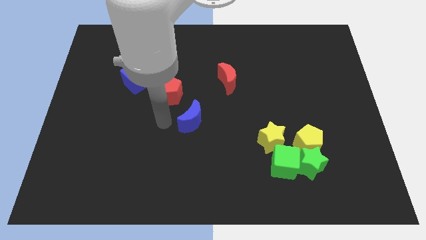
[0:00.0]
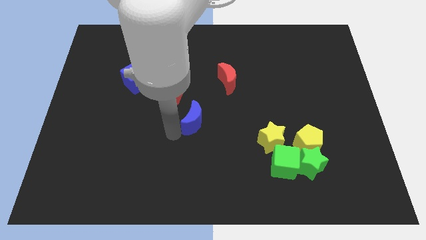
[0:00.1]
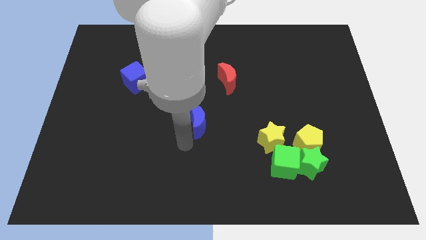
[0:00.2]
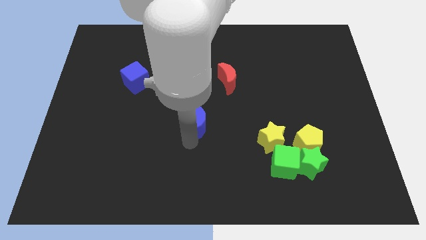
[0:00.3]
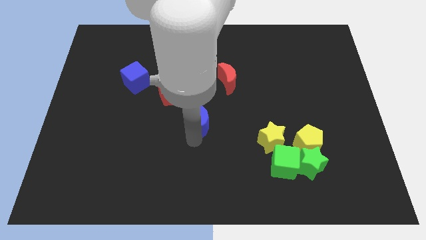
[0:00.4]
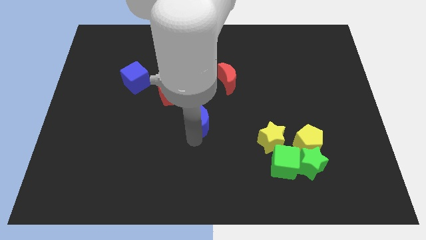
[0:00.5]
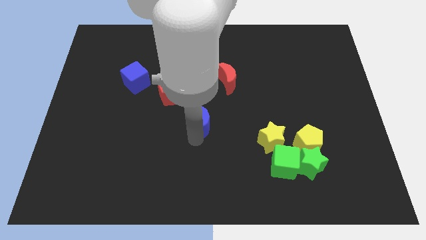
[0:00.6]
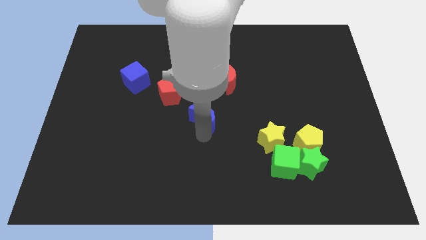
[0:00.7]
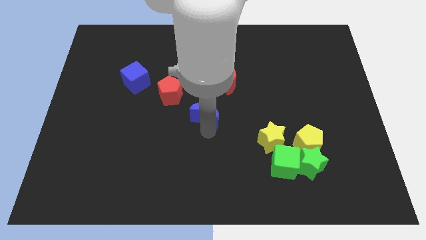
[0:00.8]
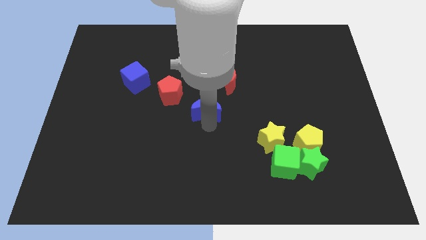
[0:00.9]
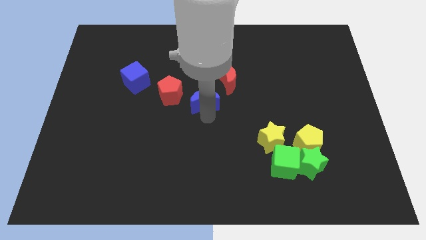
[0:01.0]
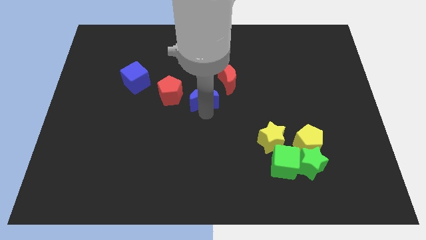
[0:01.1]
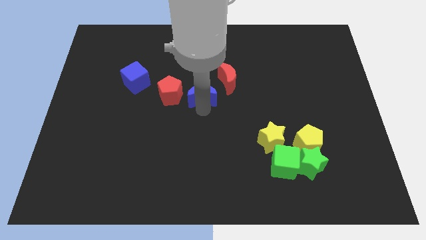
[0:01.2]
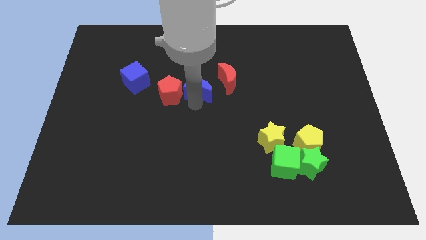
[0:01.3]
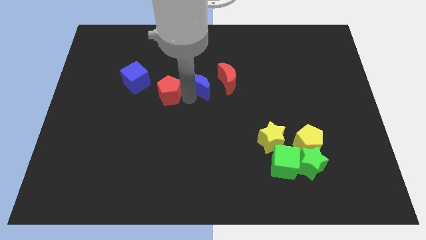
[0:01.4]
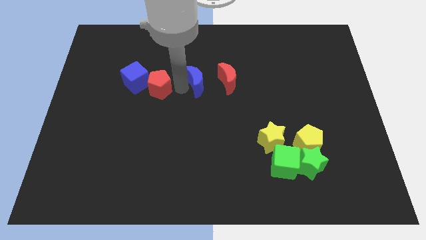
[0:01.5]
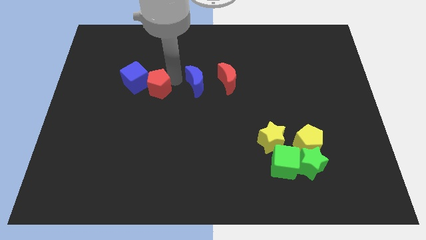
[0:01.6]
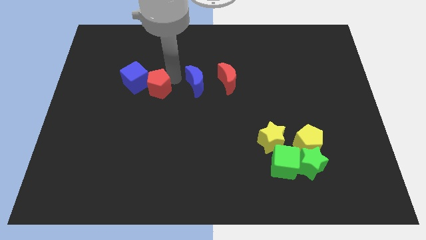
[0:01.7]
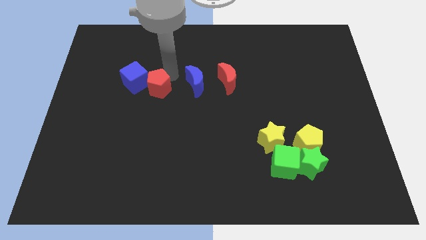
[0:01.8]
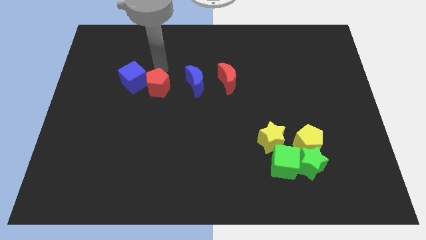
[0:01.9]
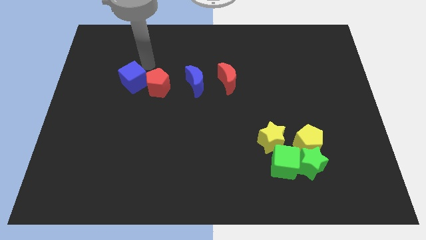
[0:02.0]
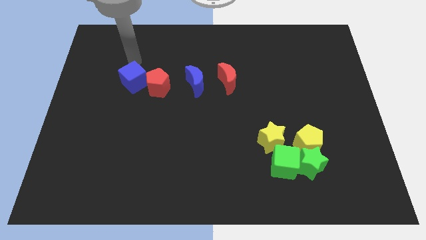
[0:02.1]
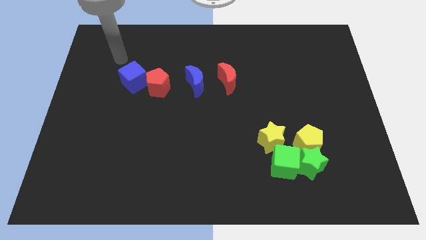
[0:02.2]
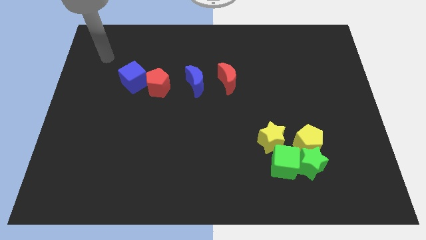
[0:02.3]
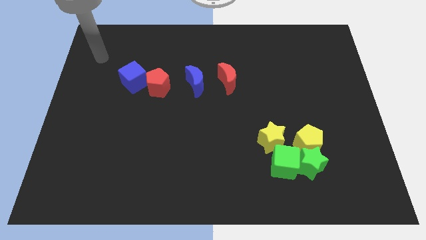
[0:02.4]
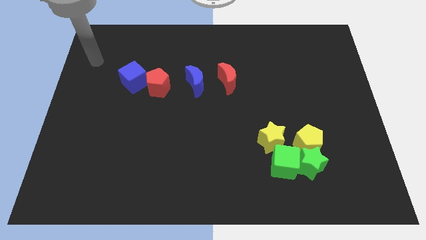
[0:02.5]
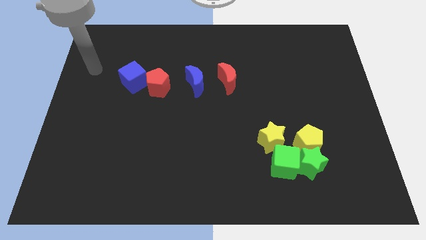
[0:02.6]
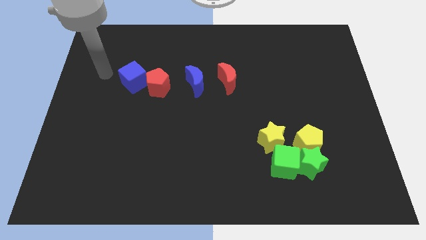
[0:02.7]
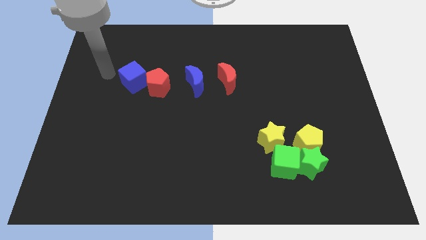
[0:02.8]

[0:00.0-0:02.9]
move the blue crescent to the right of the red pentagon

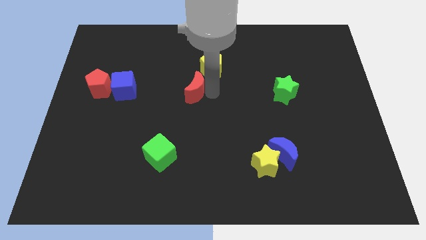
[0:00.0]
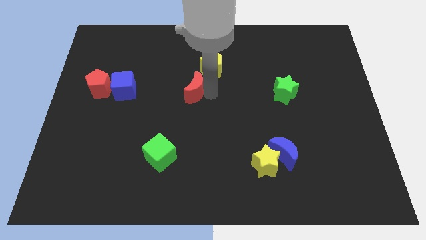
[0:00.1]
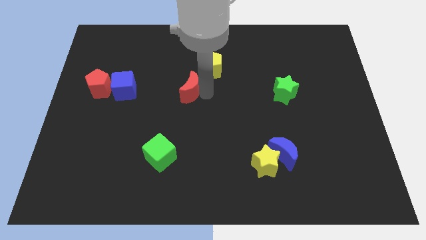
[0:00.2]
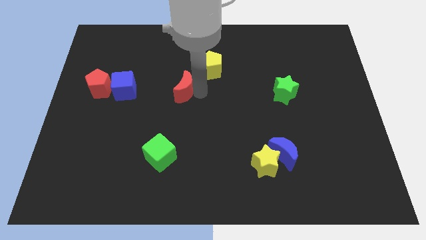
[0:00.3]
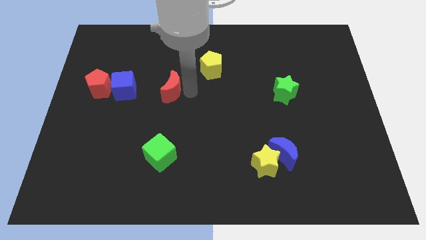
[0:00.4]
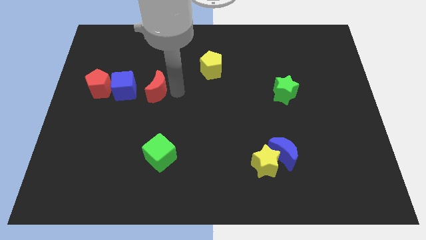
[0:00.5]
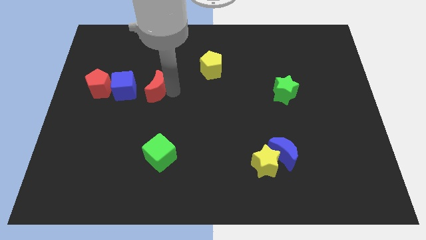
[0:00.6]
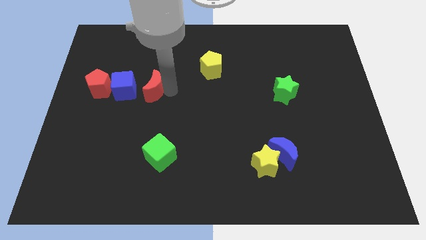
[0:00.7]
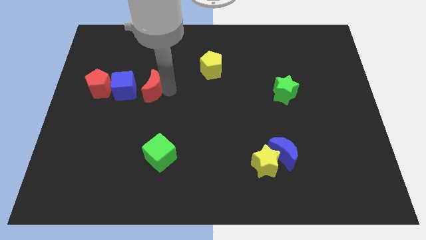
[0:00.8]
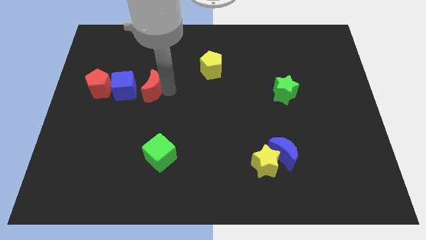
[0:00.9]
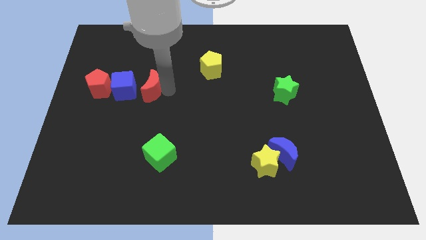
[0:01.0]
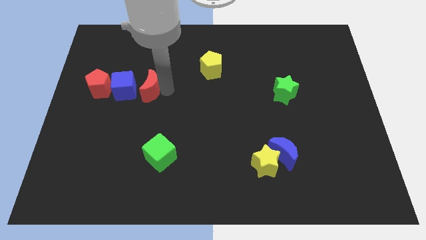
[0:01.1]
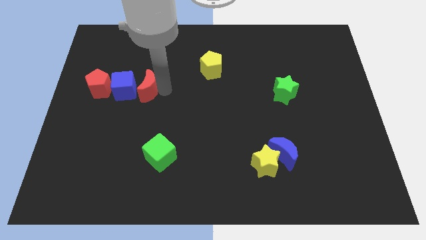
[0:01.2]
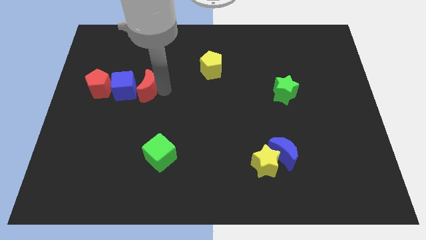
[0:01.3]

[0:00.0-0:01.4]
move the red moon to the right of the blue cube

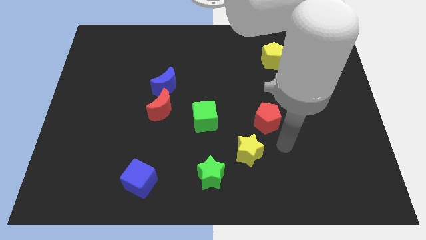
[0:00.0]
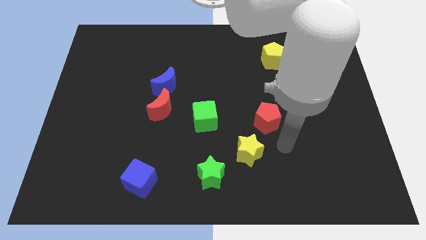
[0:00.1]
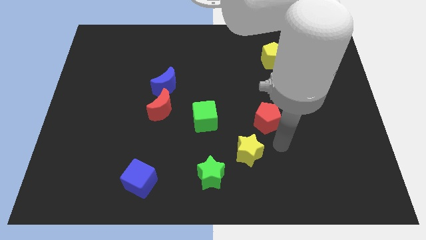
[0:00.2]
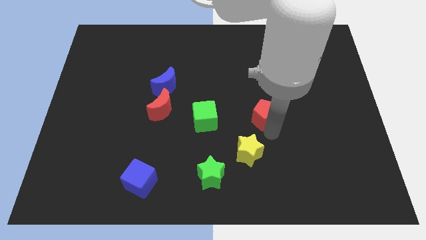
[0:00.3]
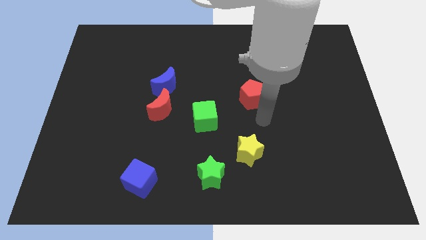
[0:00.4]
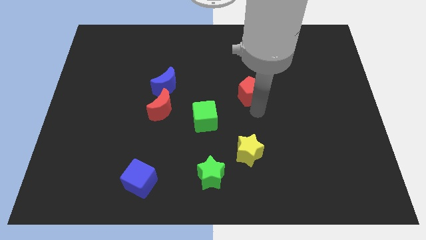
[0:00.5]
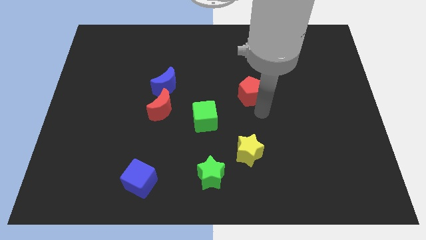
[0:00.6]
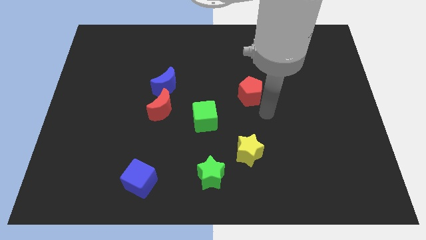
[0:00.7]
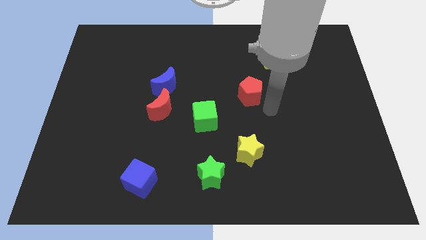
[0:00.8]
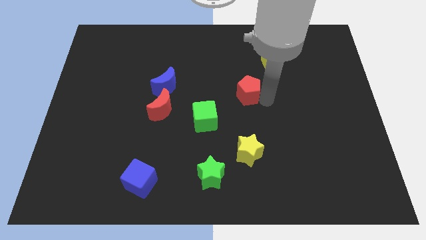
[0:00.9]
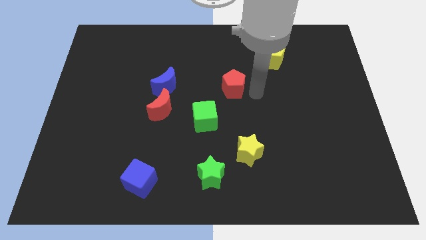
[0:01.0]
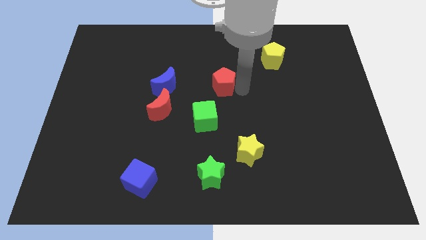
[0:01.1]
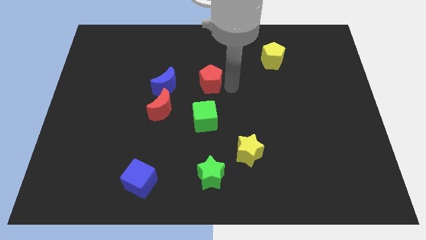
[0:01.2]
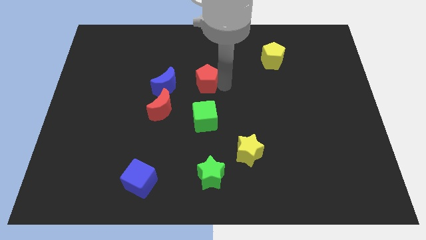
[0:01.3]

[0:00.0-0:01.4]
push the red pentagon to the right of the blue crescent

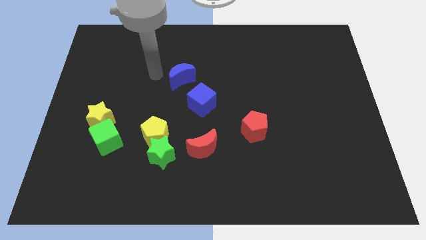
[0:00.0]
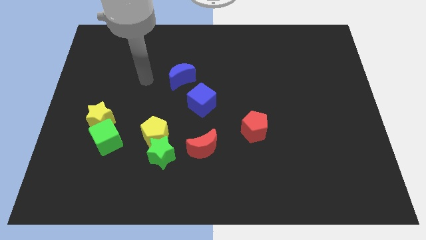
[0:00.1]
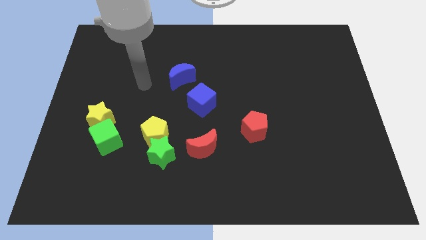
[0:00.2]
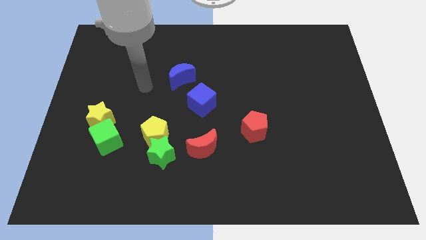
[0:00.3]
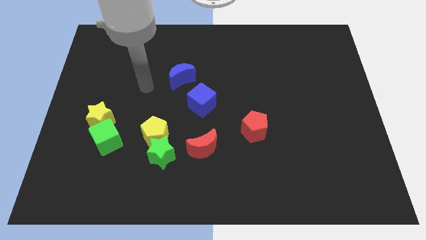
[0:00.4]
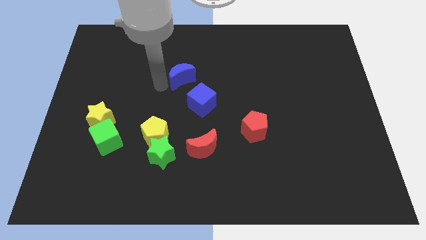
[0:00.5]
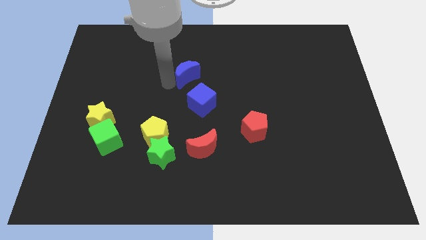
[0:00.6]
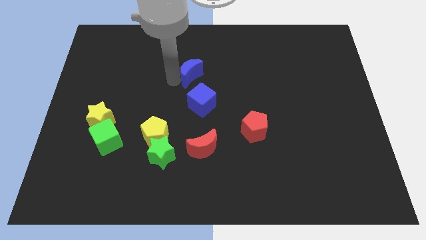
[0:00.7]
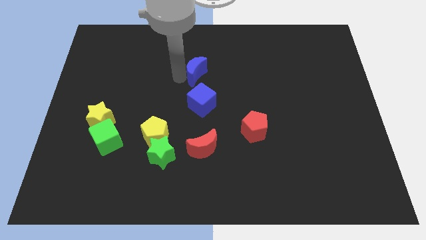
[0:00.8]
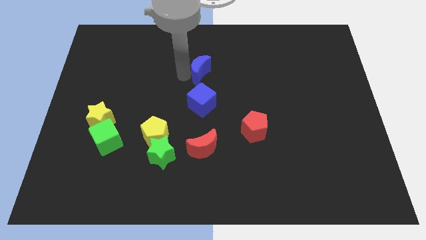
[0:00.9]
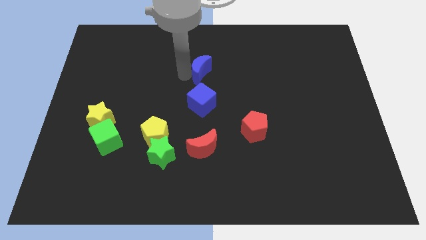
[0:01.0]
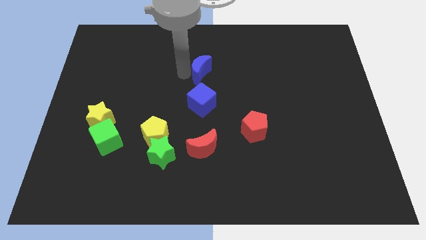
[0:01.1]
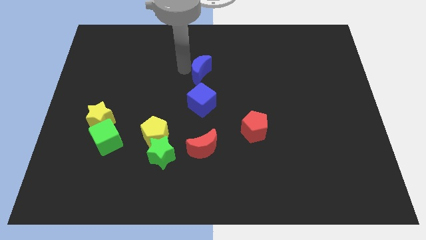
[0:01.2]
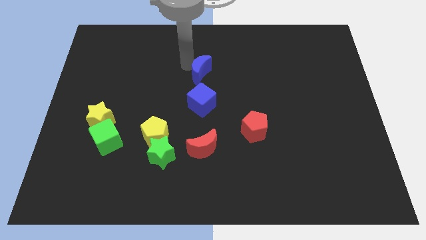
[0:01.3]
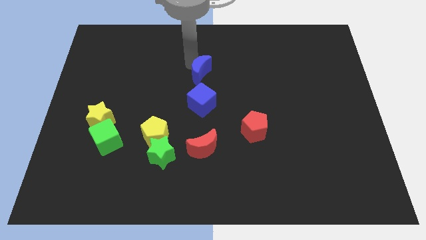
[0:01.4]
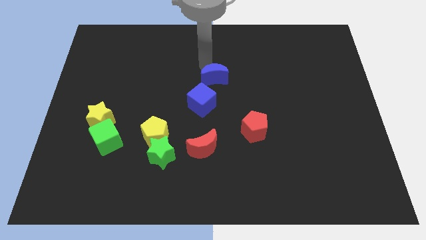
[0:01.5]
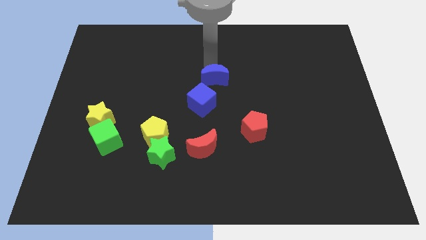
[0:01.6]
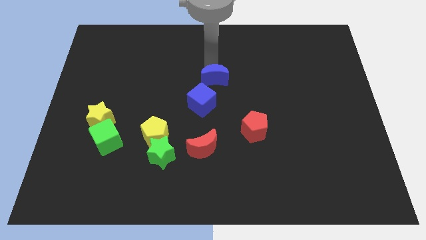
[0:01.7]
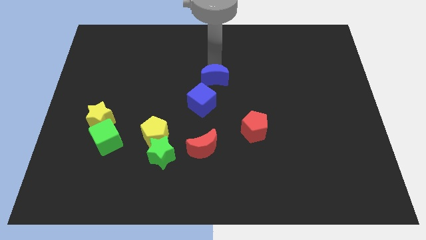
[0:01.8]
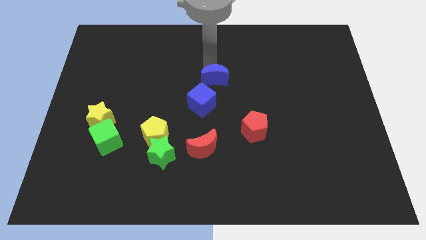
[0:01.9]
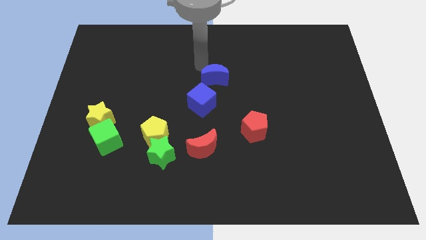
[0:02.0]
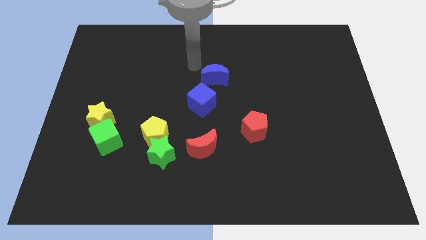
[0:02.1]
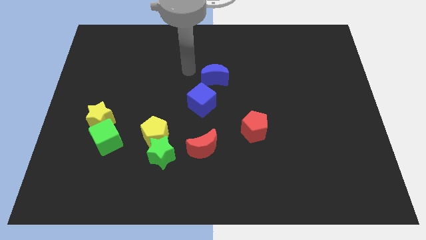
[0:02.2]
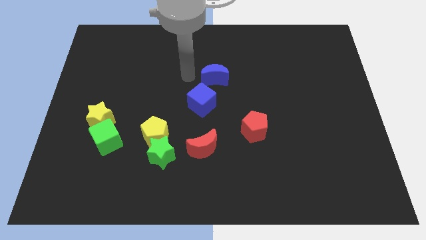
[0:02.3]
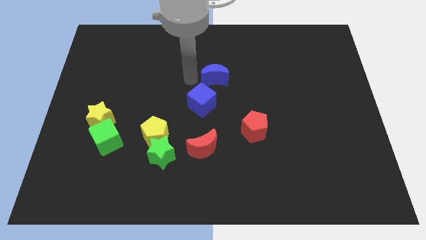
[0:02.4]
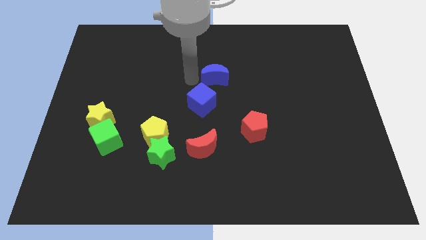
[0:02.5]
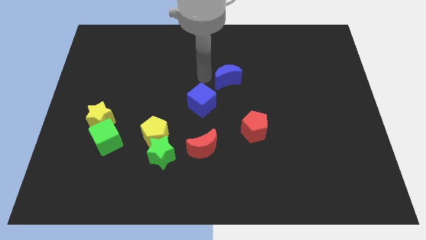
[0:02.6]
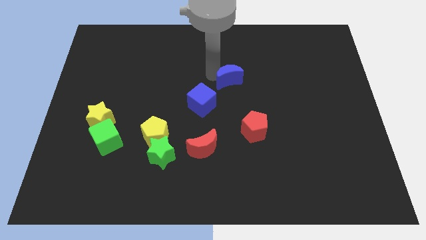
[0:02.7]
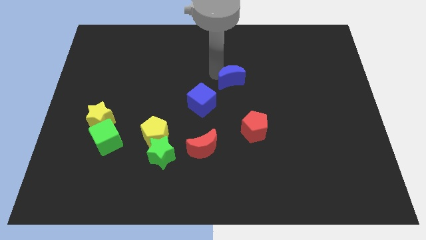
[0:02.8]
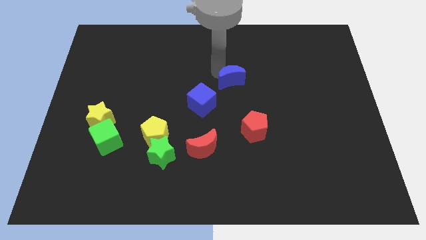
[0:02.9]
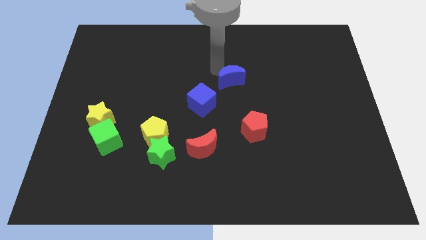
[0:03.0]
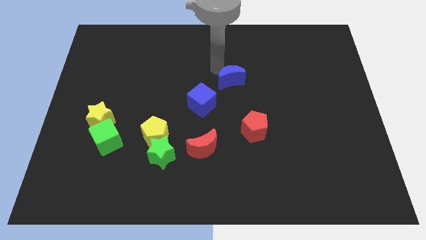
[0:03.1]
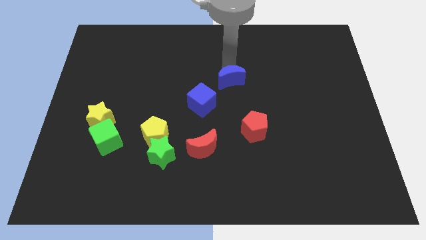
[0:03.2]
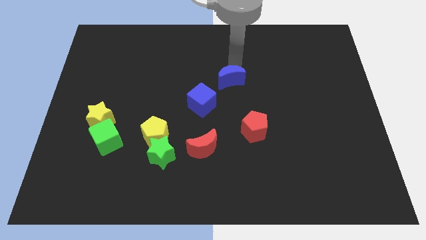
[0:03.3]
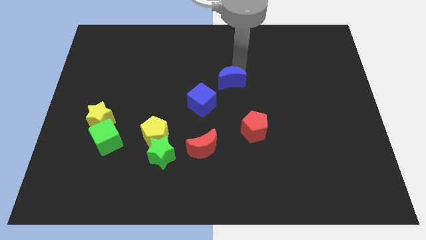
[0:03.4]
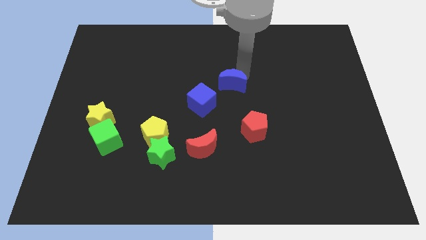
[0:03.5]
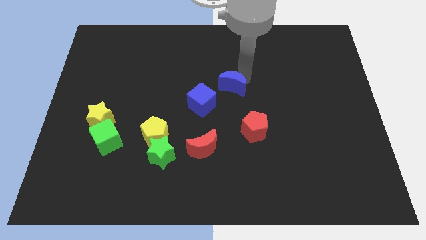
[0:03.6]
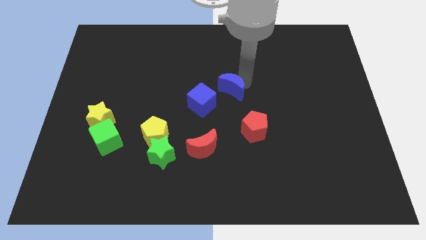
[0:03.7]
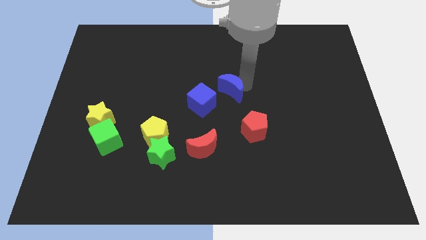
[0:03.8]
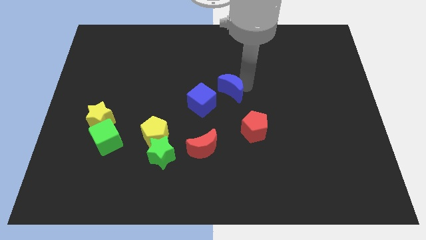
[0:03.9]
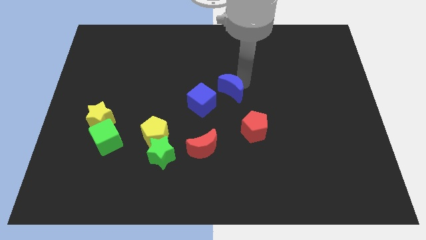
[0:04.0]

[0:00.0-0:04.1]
place blue crescent to the right side of the blue cube
